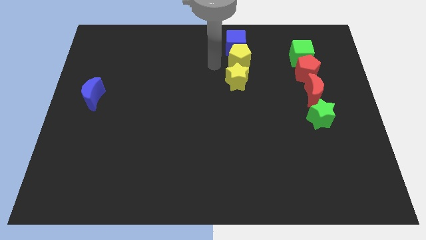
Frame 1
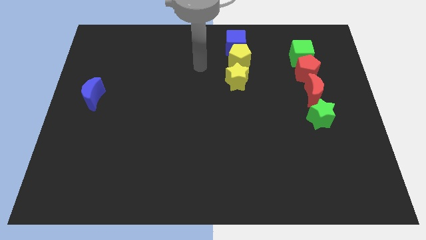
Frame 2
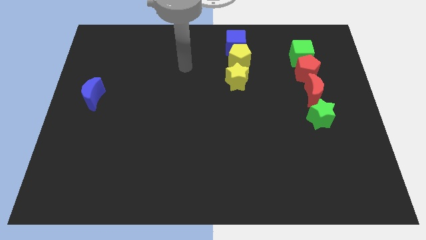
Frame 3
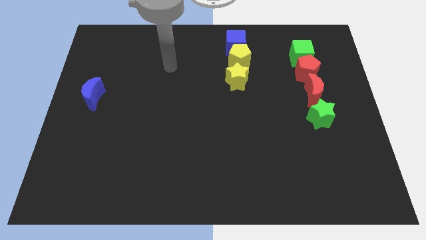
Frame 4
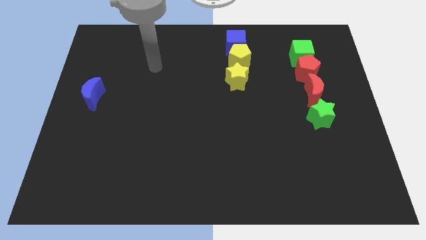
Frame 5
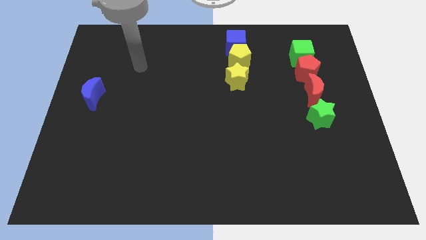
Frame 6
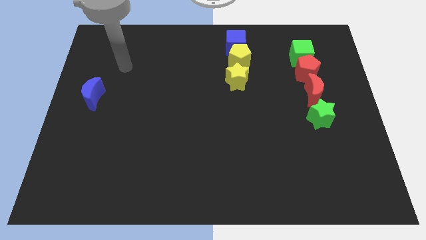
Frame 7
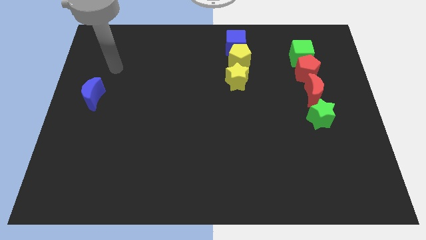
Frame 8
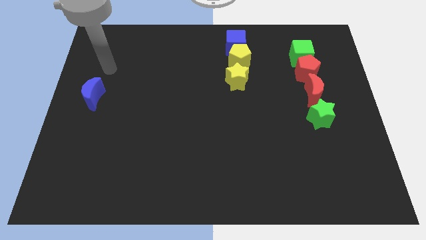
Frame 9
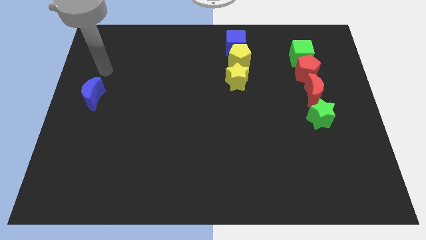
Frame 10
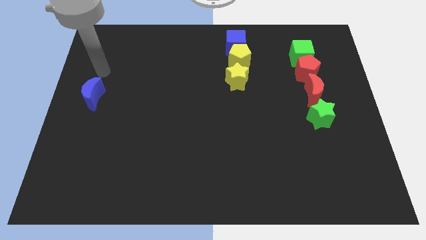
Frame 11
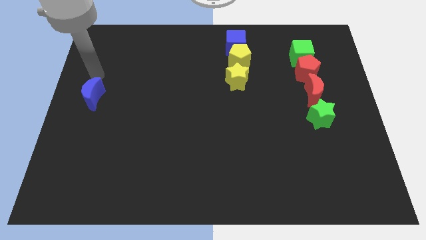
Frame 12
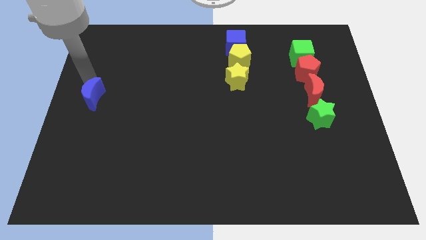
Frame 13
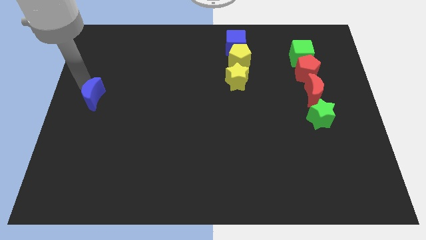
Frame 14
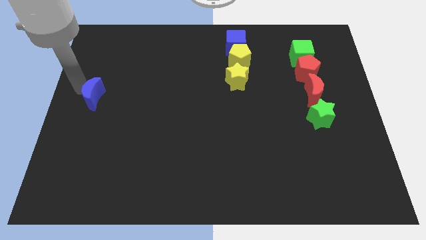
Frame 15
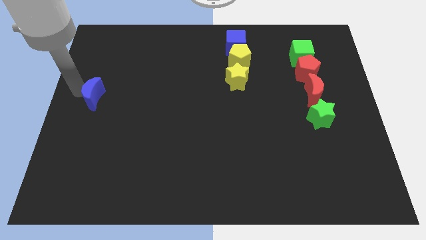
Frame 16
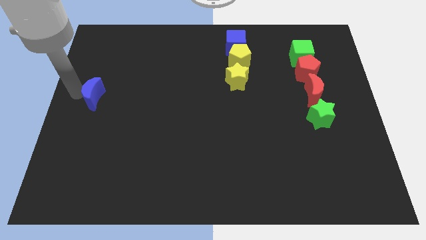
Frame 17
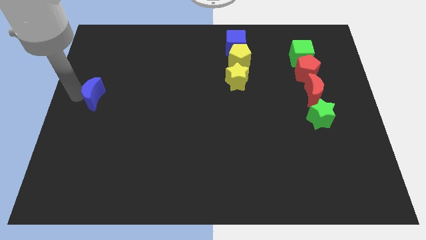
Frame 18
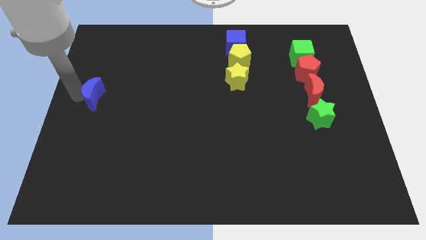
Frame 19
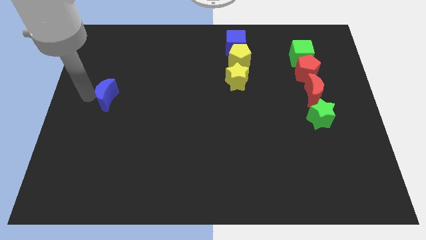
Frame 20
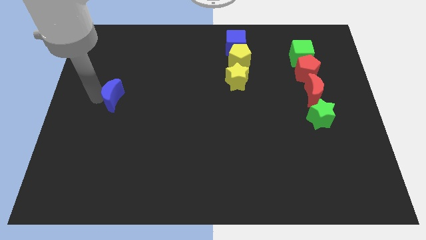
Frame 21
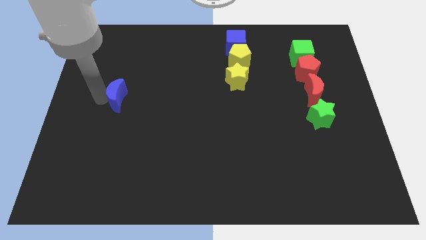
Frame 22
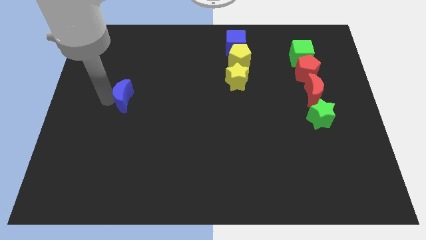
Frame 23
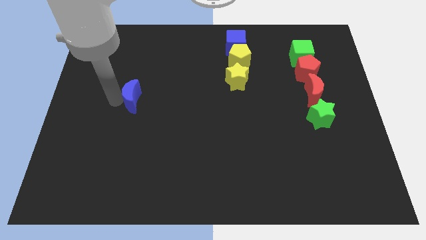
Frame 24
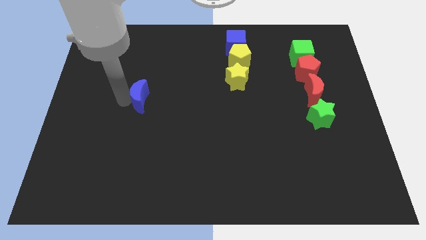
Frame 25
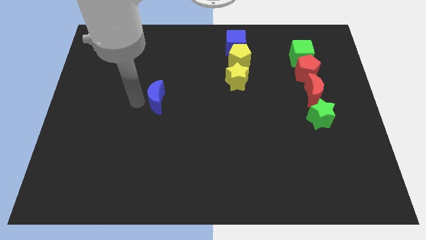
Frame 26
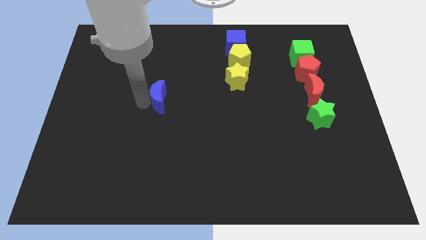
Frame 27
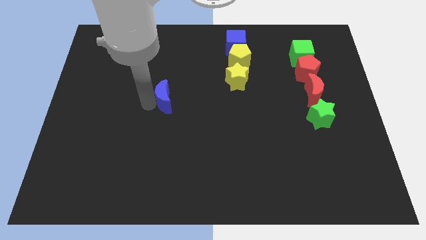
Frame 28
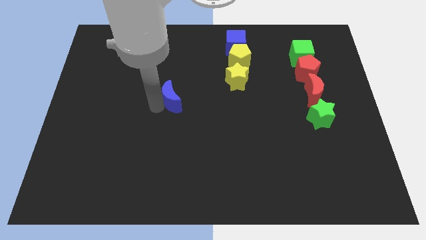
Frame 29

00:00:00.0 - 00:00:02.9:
move the blue crescent to the right

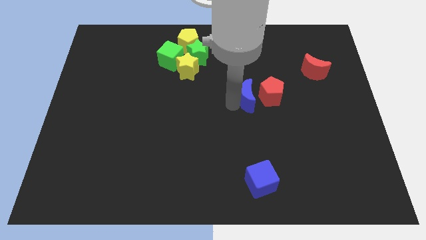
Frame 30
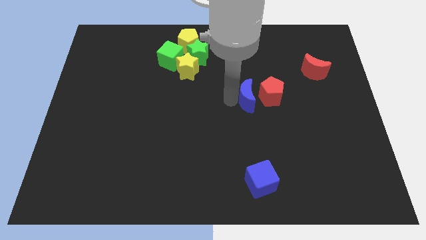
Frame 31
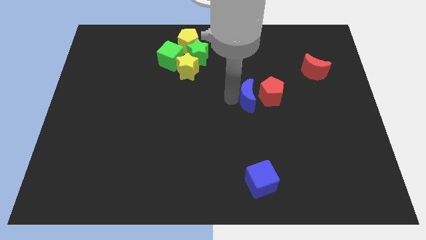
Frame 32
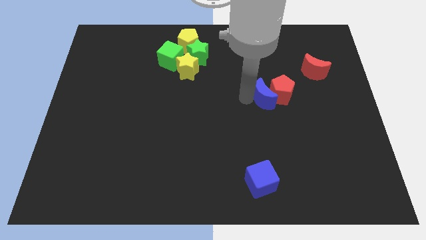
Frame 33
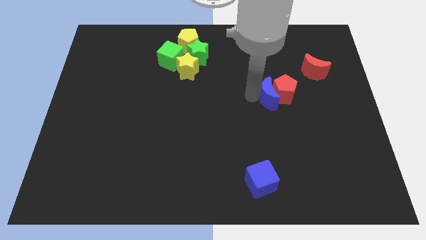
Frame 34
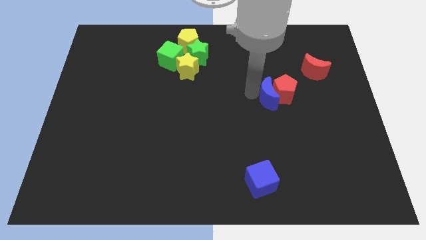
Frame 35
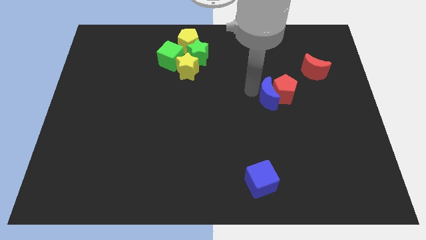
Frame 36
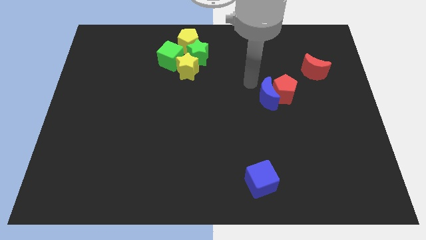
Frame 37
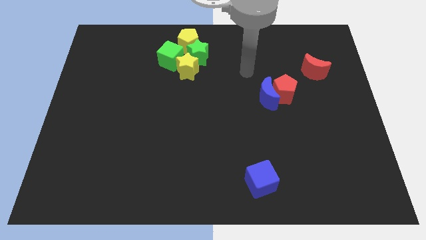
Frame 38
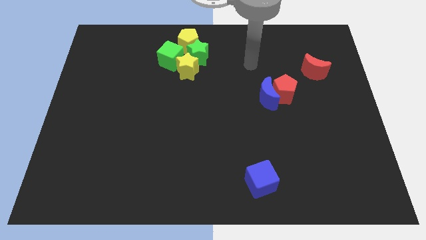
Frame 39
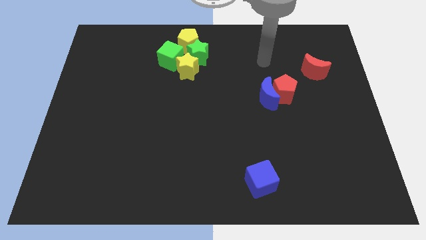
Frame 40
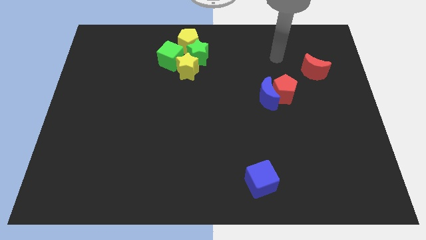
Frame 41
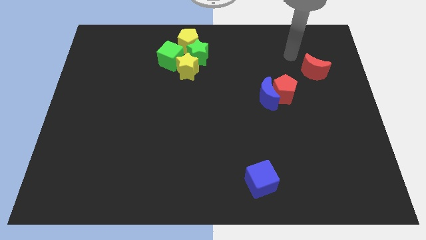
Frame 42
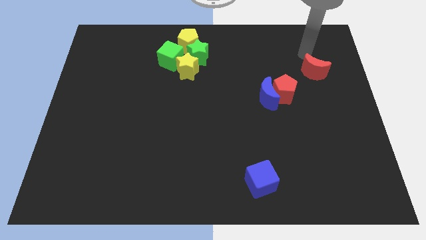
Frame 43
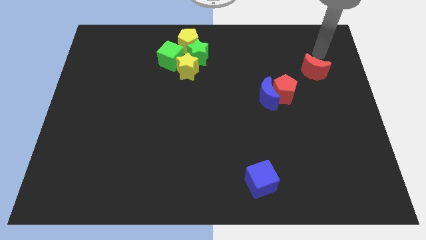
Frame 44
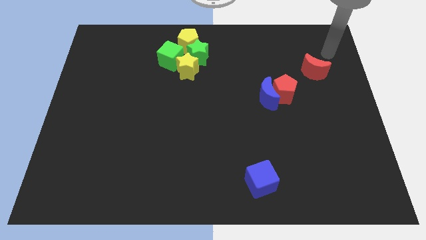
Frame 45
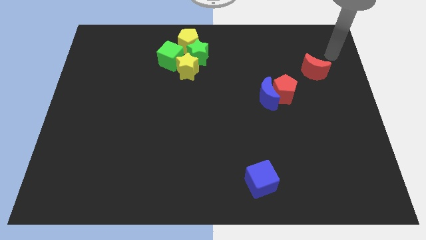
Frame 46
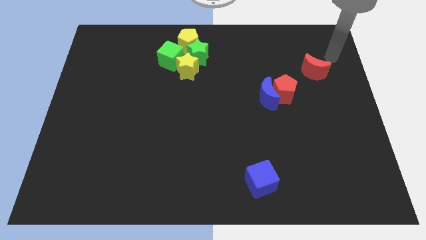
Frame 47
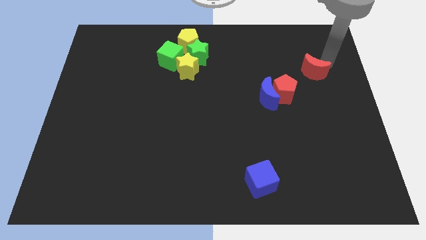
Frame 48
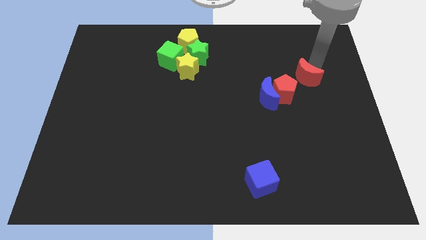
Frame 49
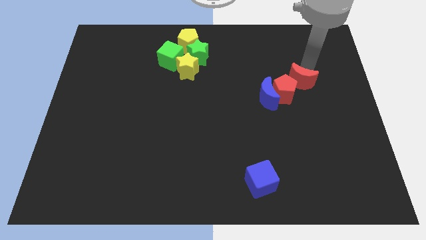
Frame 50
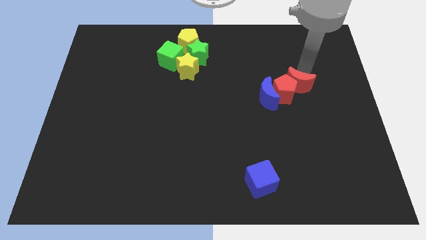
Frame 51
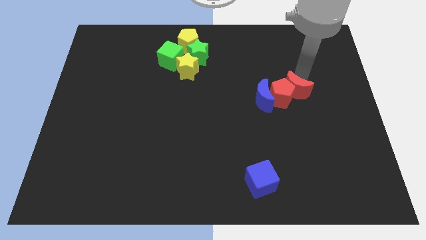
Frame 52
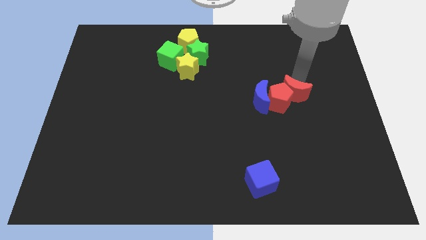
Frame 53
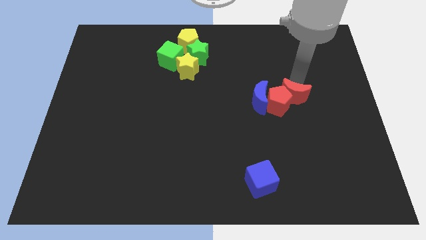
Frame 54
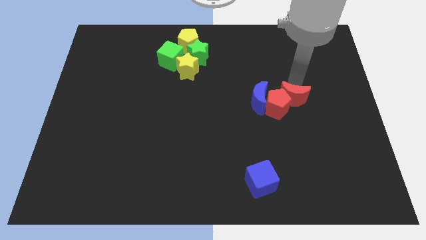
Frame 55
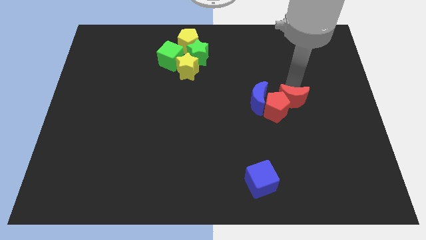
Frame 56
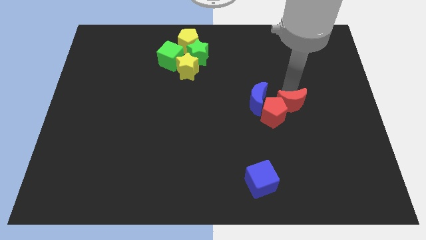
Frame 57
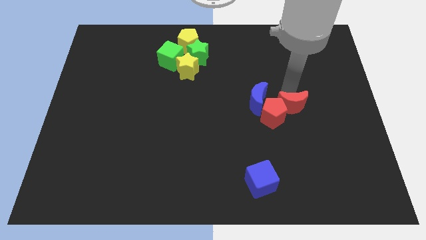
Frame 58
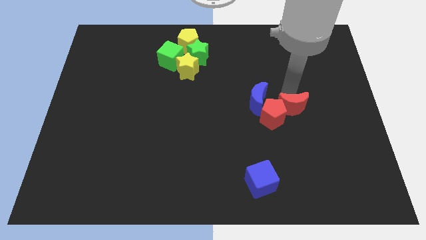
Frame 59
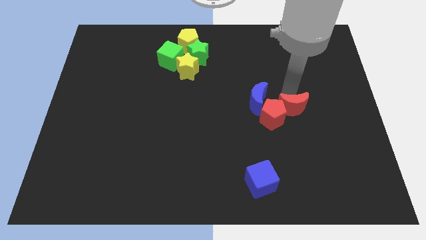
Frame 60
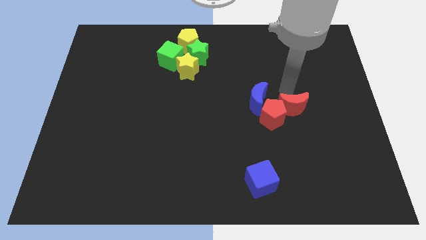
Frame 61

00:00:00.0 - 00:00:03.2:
push red crescent slightly towards down

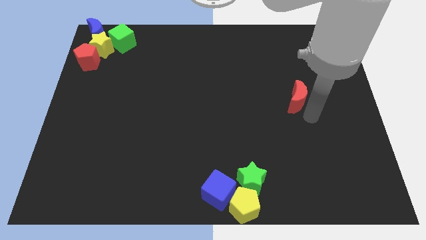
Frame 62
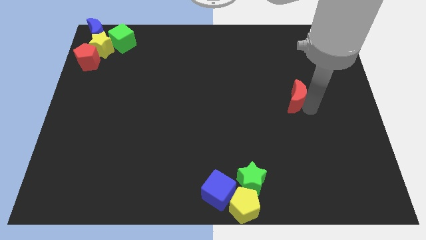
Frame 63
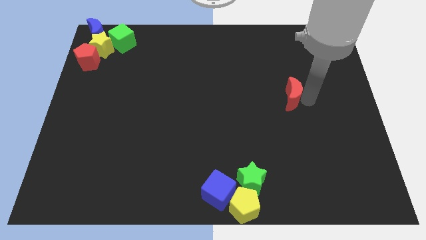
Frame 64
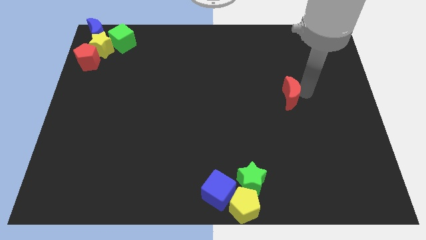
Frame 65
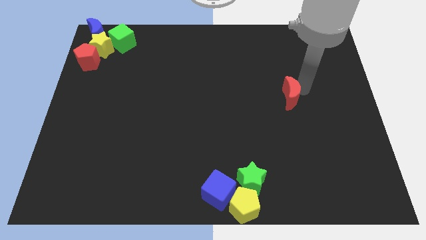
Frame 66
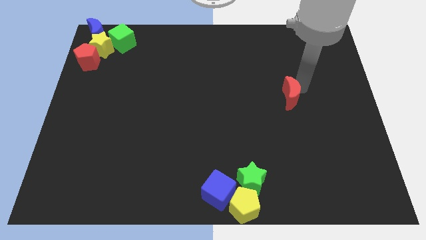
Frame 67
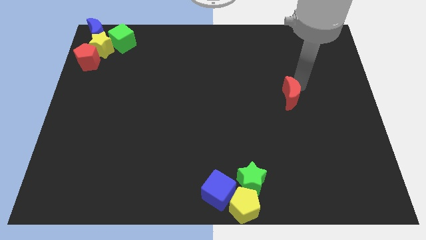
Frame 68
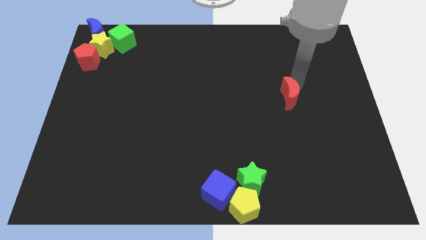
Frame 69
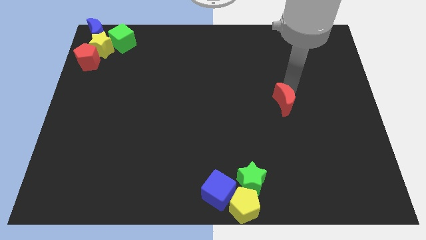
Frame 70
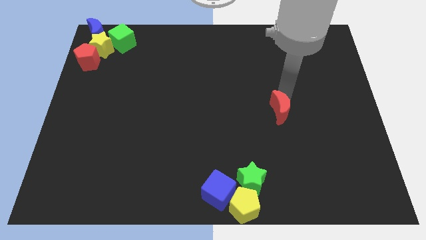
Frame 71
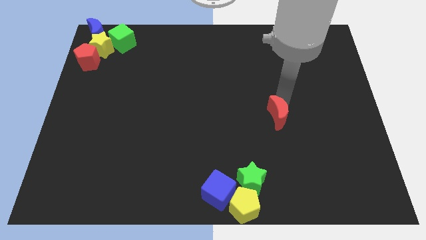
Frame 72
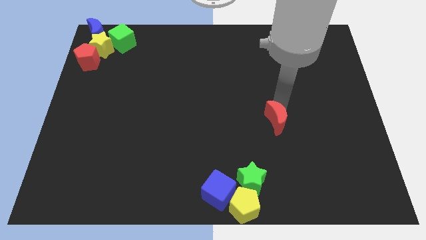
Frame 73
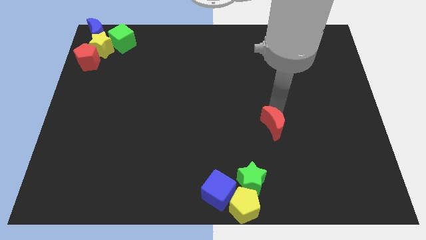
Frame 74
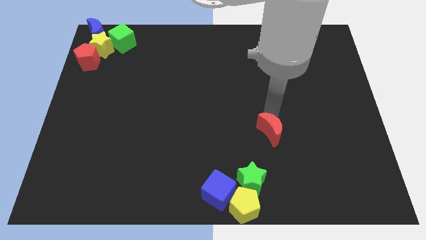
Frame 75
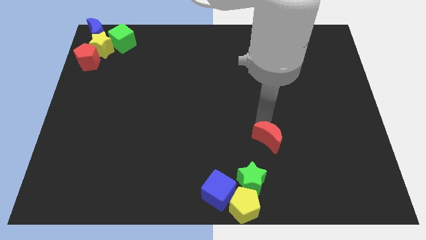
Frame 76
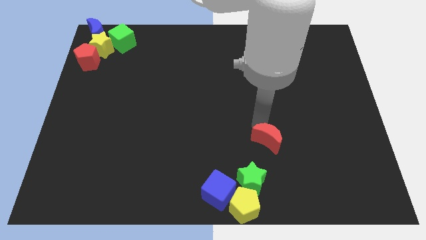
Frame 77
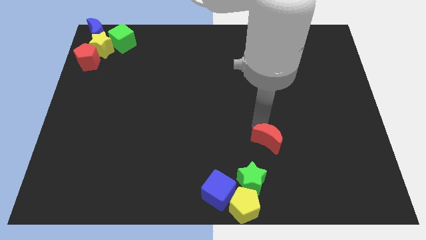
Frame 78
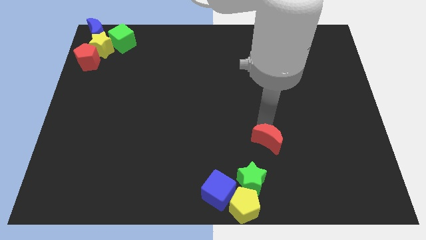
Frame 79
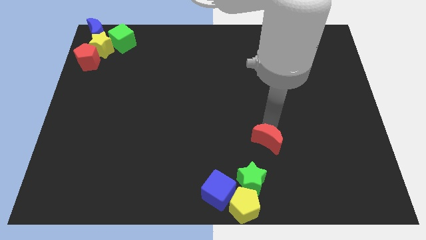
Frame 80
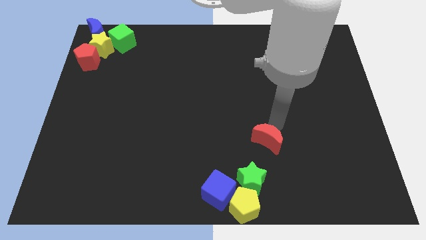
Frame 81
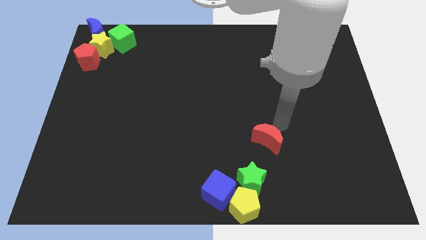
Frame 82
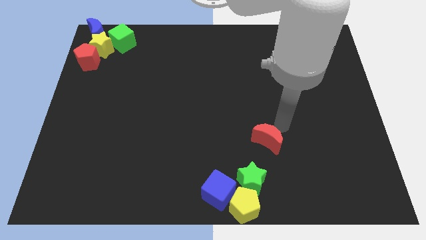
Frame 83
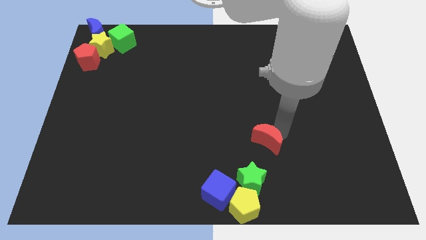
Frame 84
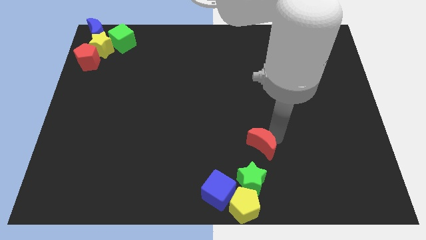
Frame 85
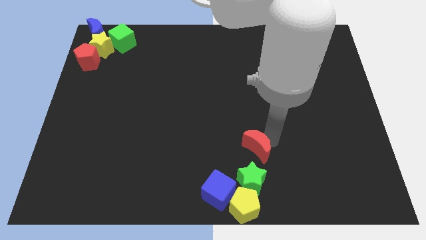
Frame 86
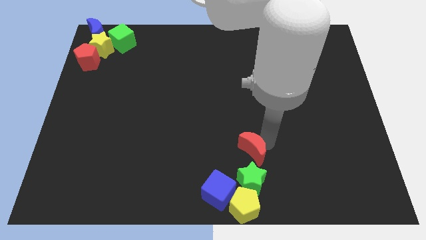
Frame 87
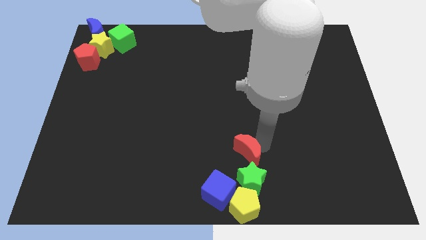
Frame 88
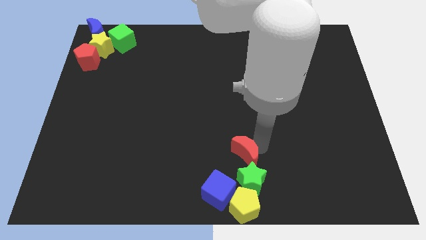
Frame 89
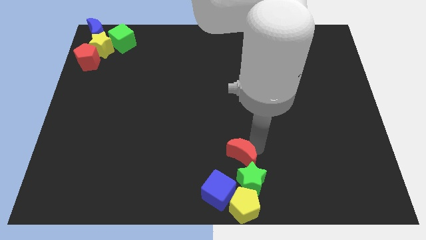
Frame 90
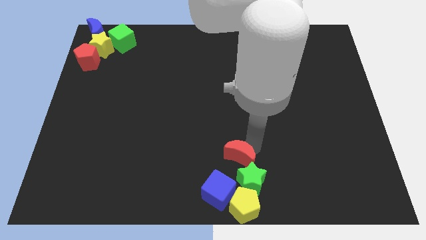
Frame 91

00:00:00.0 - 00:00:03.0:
move the red crescent to the top of the green star
